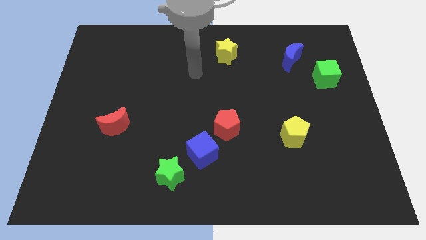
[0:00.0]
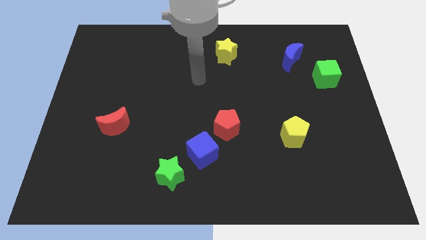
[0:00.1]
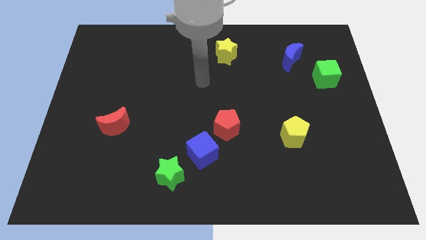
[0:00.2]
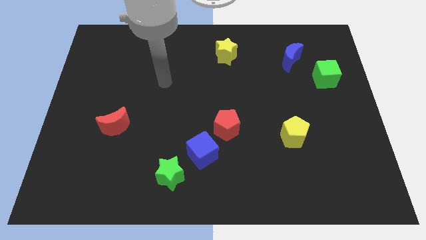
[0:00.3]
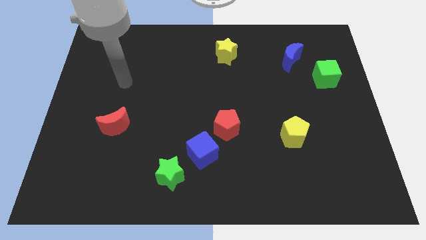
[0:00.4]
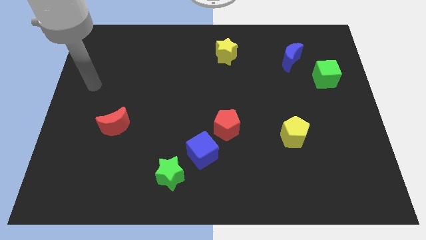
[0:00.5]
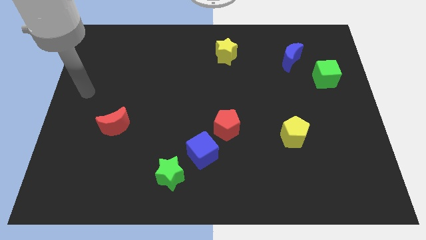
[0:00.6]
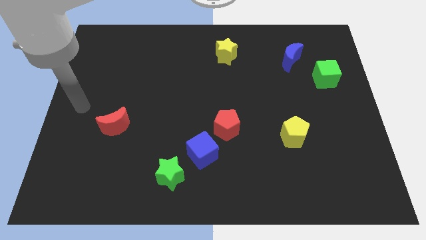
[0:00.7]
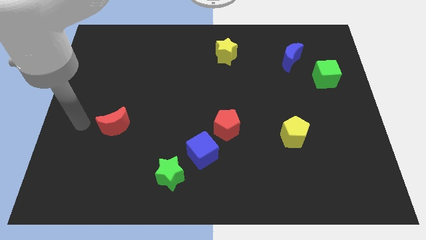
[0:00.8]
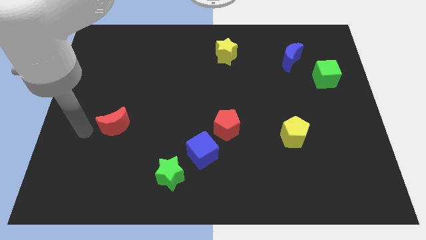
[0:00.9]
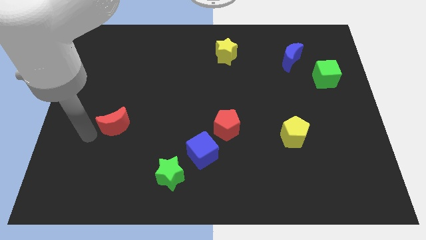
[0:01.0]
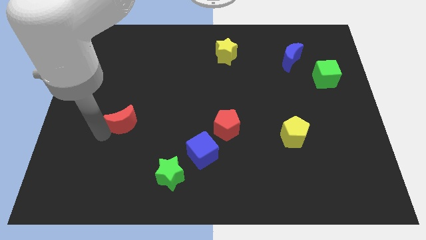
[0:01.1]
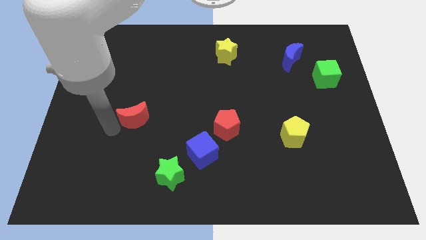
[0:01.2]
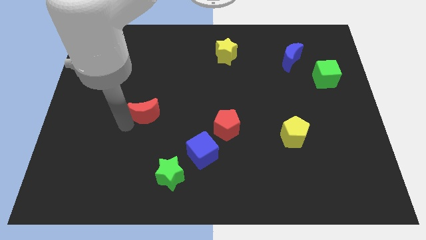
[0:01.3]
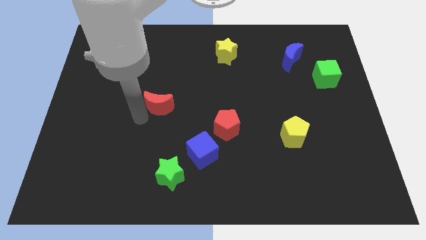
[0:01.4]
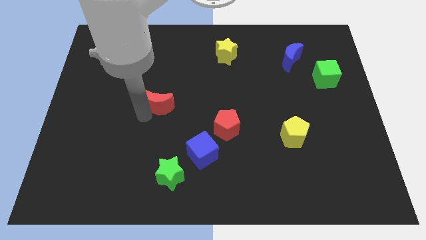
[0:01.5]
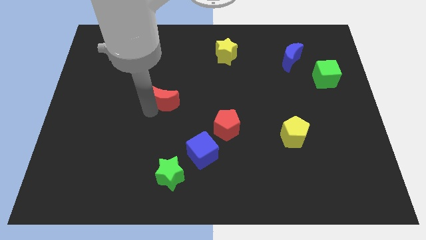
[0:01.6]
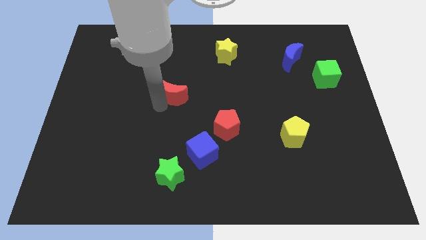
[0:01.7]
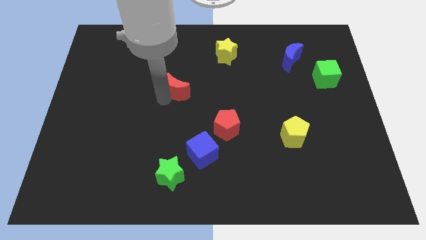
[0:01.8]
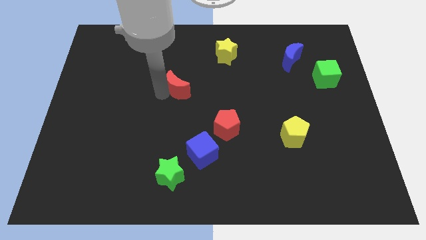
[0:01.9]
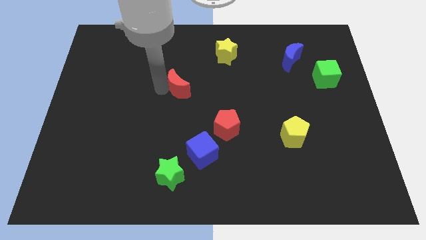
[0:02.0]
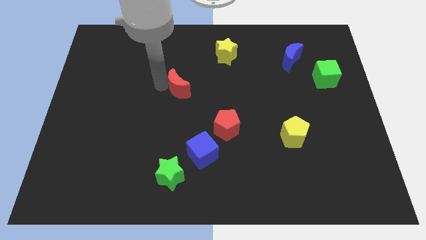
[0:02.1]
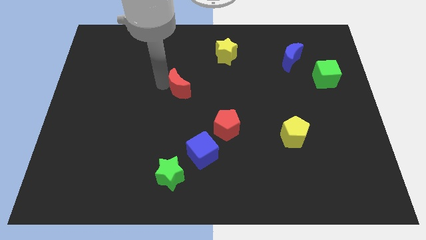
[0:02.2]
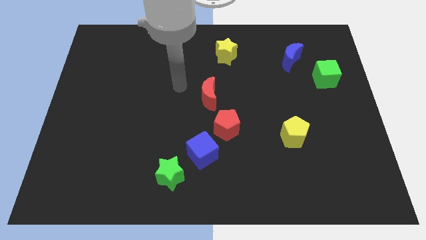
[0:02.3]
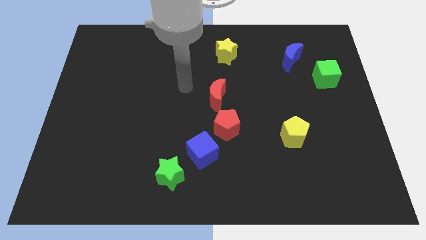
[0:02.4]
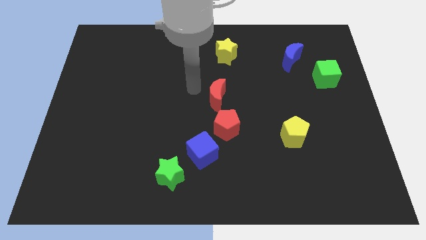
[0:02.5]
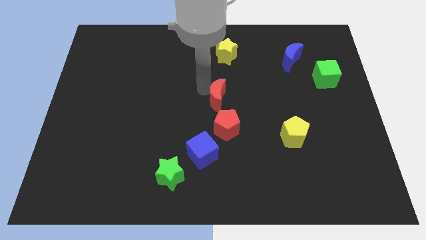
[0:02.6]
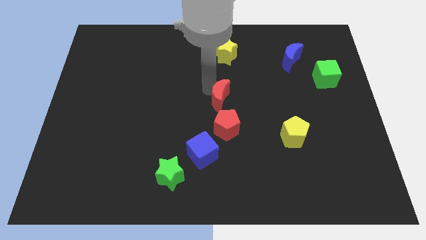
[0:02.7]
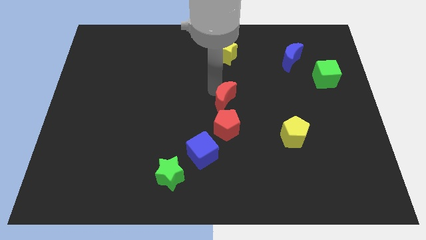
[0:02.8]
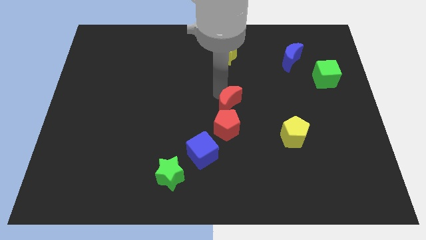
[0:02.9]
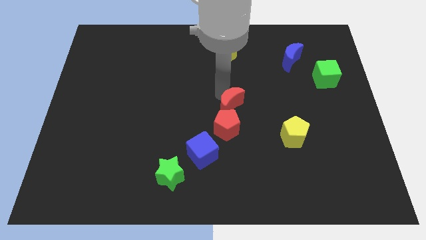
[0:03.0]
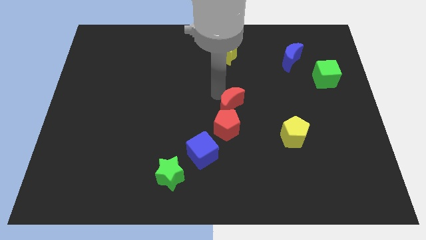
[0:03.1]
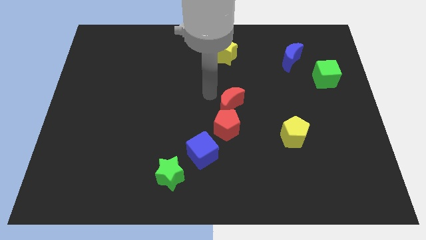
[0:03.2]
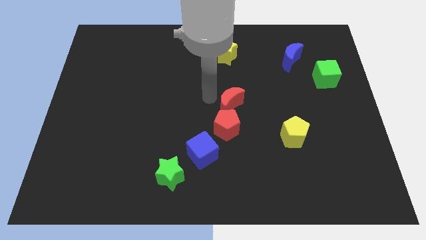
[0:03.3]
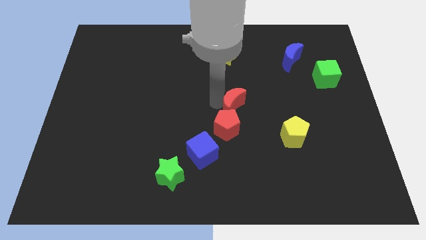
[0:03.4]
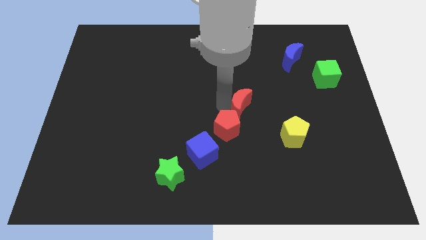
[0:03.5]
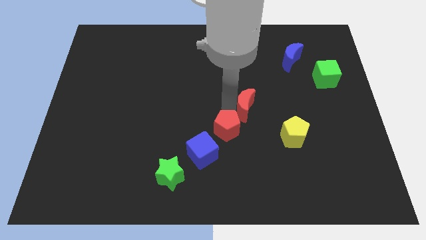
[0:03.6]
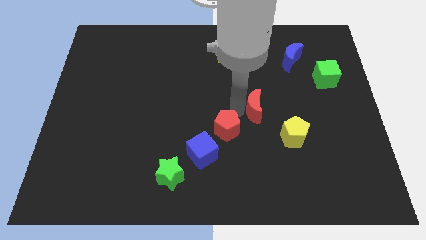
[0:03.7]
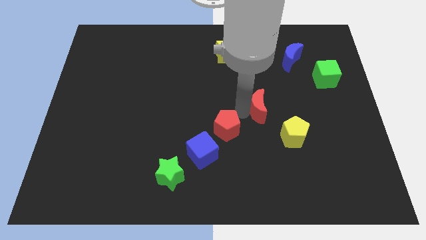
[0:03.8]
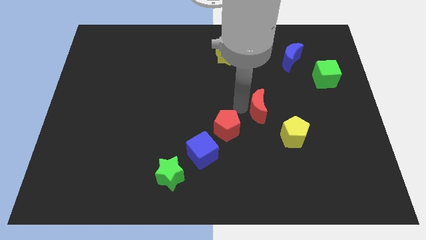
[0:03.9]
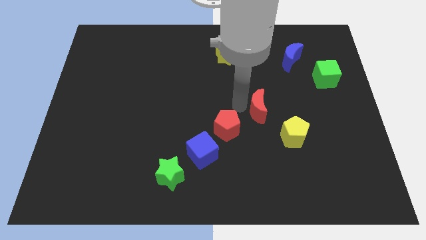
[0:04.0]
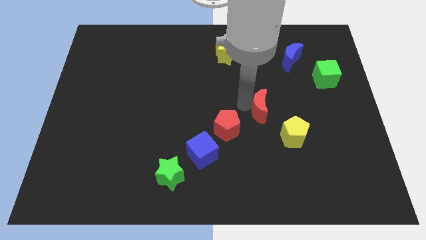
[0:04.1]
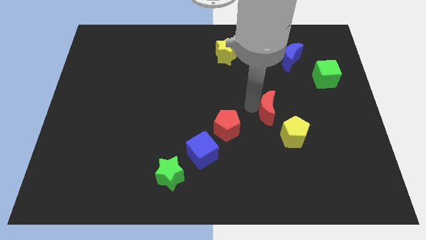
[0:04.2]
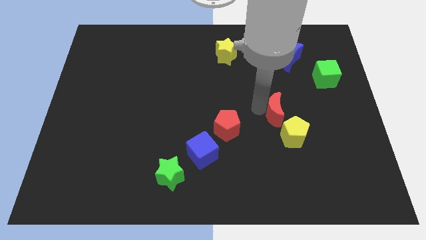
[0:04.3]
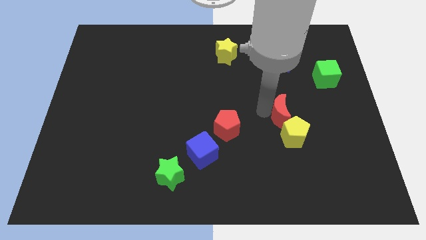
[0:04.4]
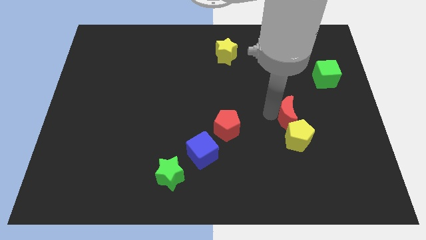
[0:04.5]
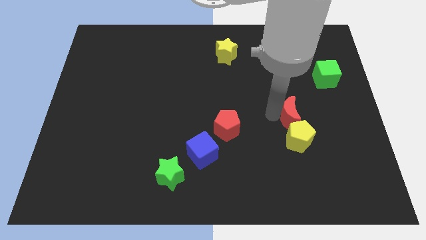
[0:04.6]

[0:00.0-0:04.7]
put the red moon to the yellow pentagon

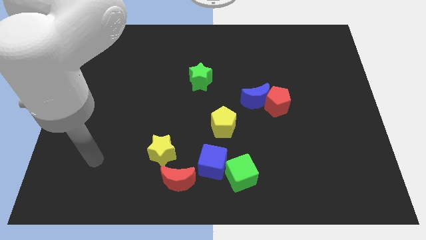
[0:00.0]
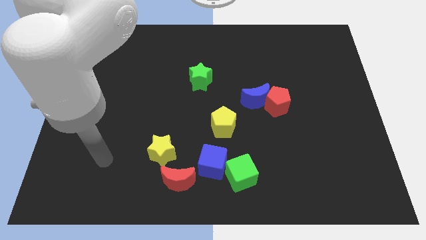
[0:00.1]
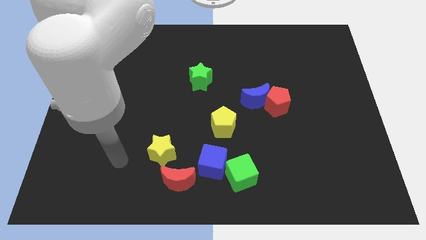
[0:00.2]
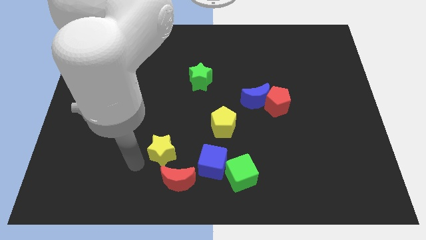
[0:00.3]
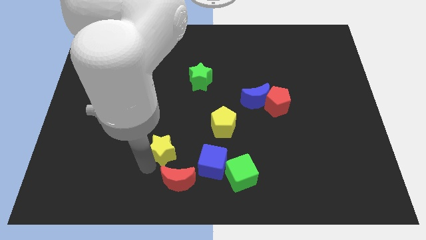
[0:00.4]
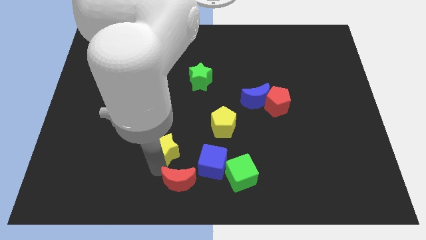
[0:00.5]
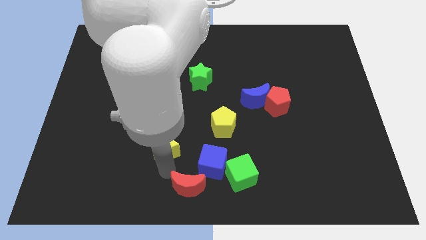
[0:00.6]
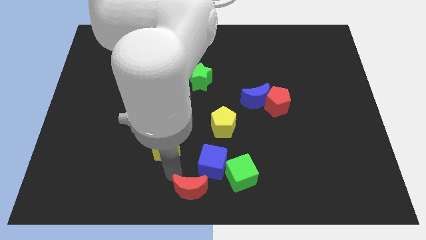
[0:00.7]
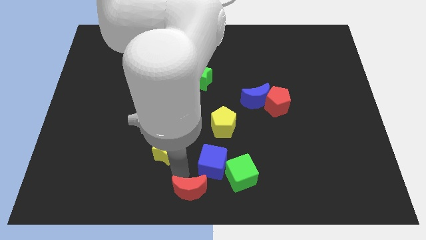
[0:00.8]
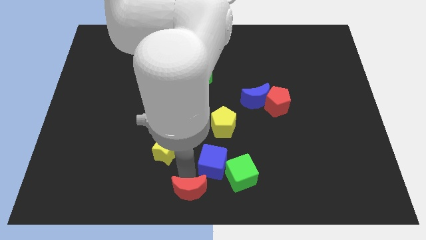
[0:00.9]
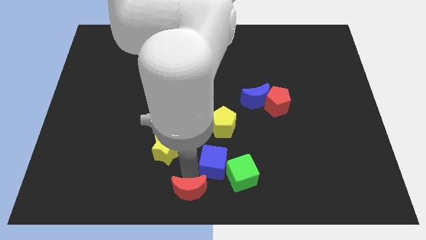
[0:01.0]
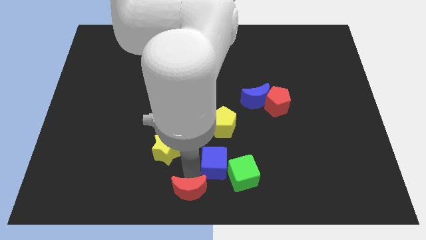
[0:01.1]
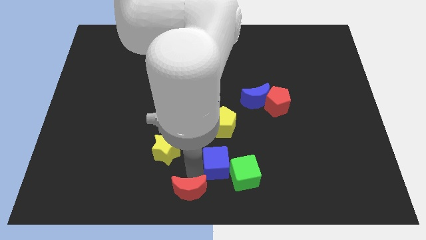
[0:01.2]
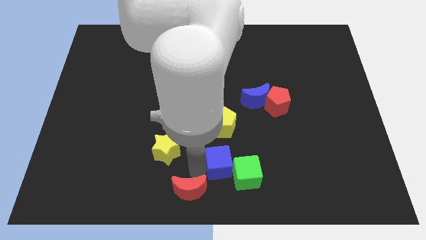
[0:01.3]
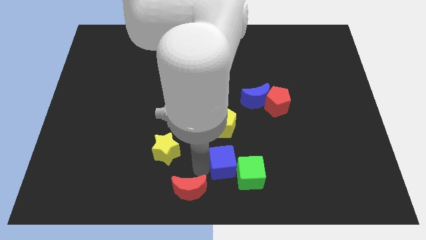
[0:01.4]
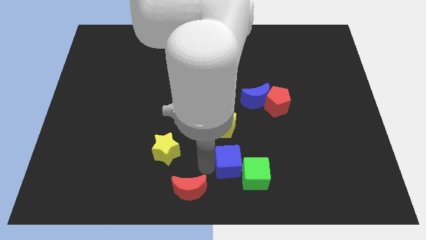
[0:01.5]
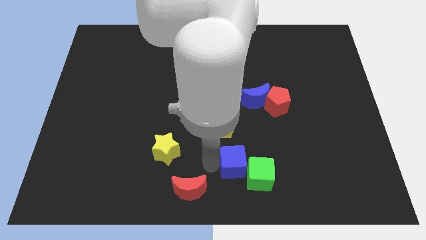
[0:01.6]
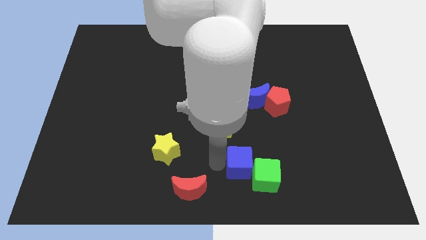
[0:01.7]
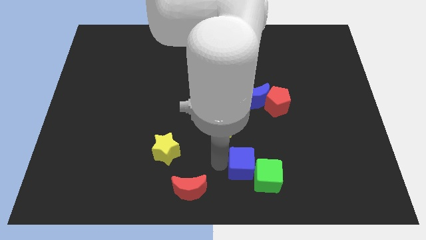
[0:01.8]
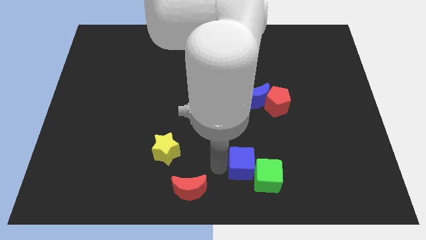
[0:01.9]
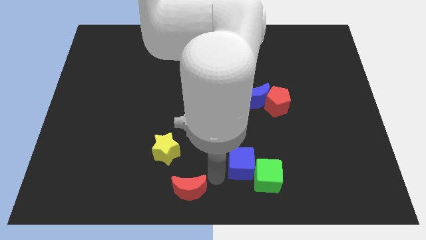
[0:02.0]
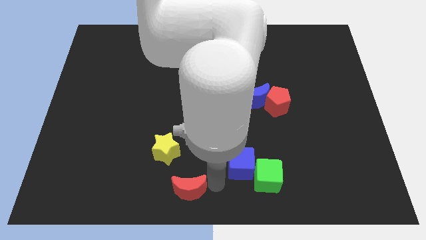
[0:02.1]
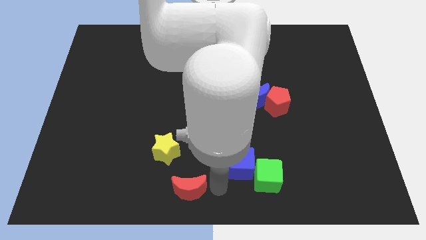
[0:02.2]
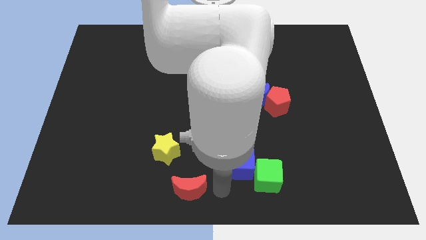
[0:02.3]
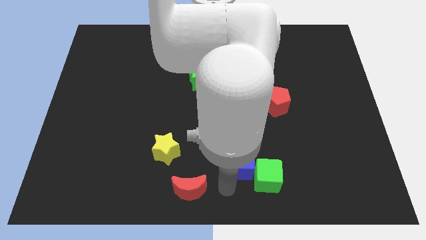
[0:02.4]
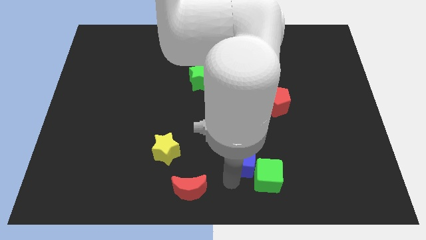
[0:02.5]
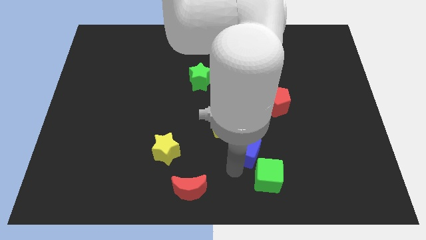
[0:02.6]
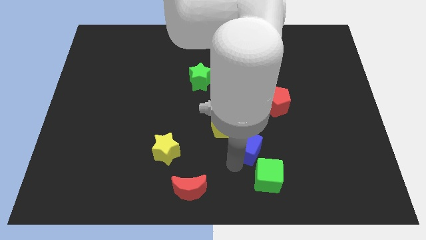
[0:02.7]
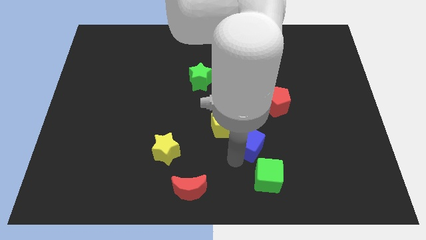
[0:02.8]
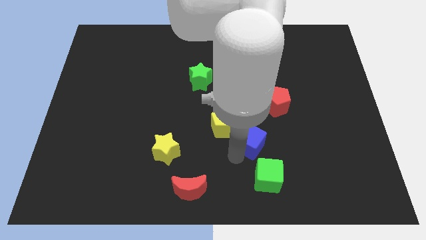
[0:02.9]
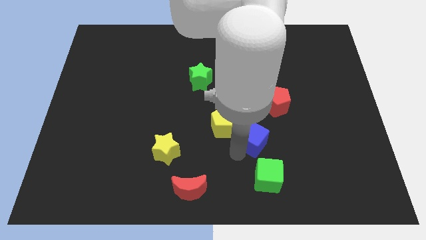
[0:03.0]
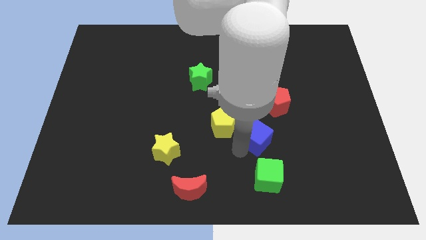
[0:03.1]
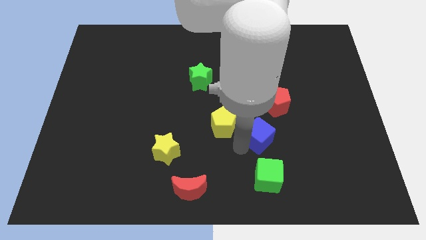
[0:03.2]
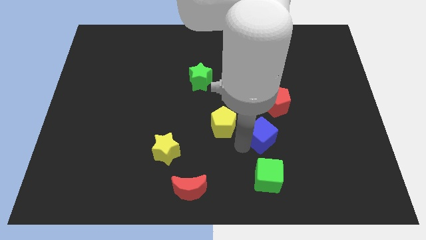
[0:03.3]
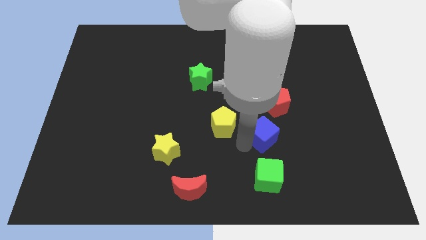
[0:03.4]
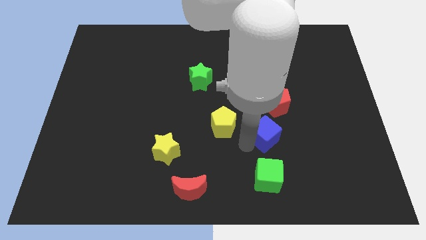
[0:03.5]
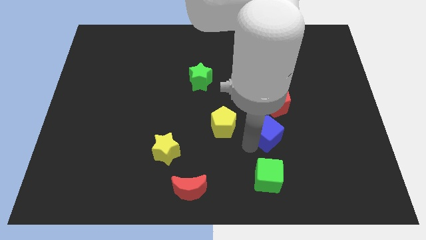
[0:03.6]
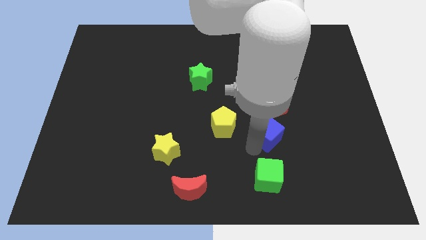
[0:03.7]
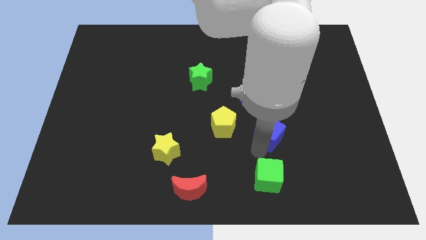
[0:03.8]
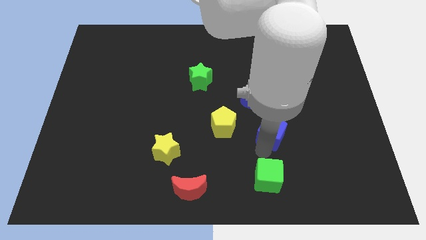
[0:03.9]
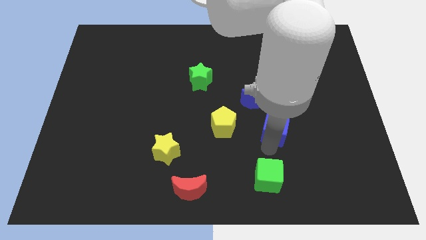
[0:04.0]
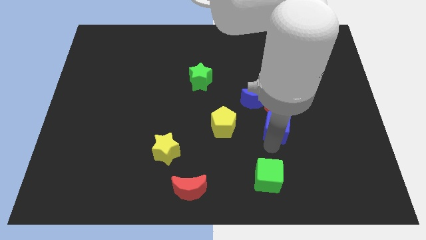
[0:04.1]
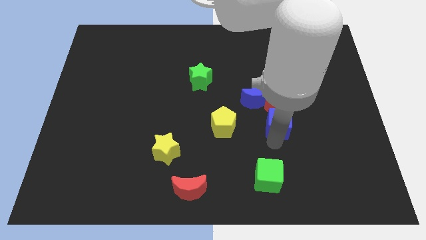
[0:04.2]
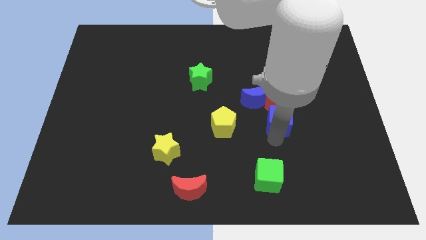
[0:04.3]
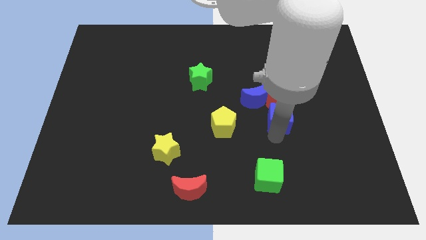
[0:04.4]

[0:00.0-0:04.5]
push the blue cube towards the red pentagon
